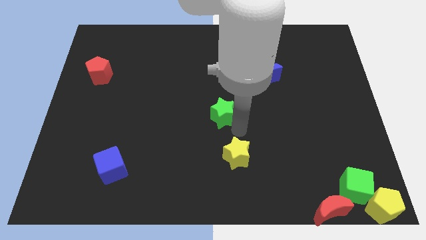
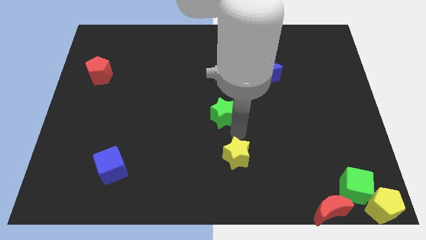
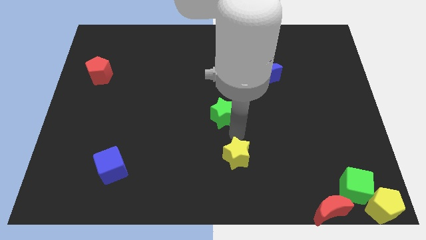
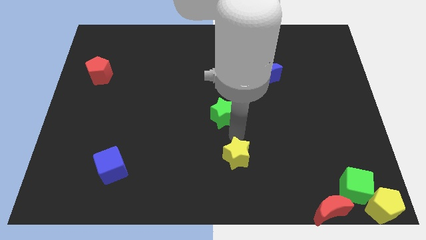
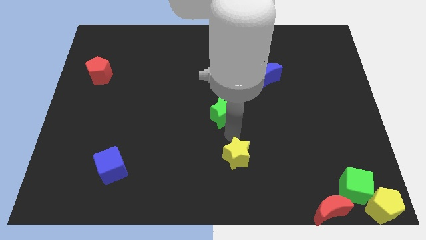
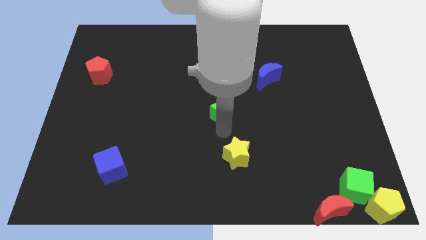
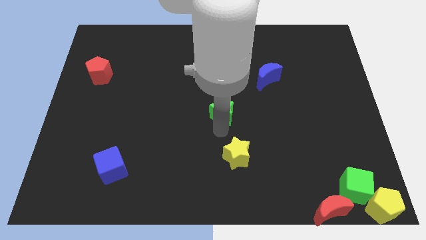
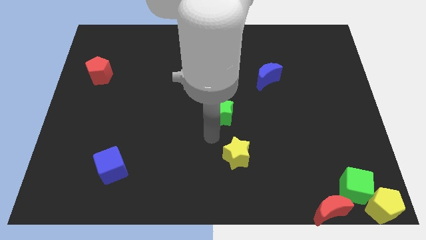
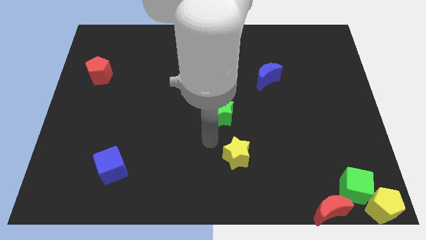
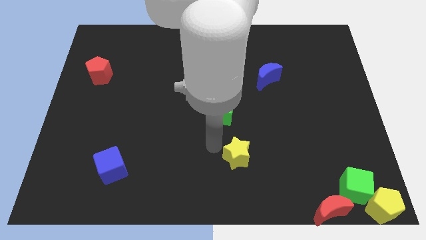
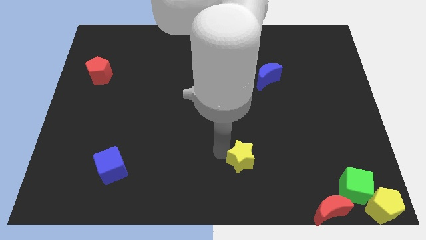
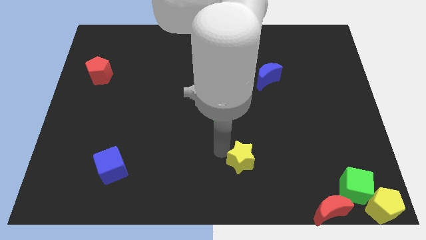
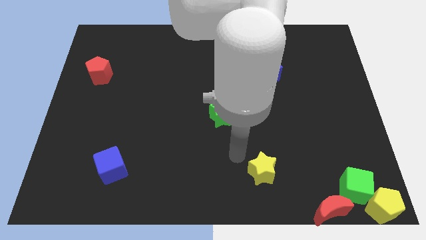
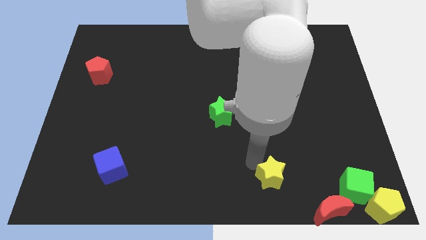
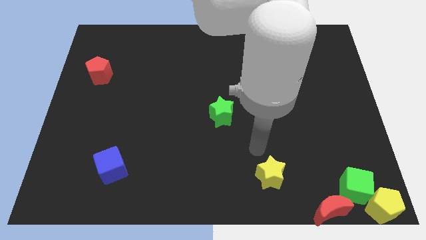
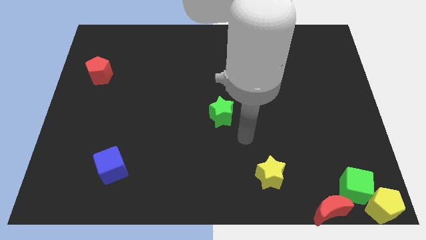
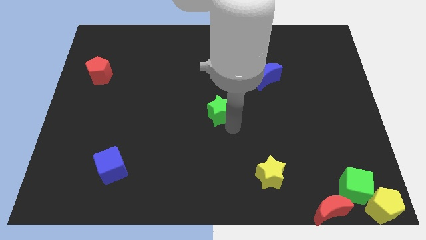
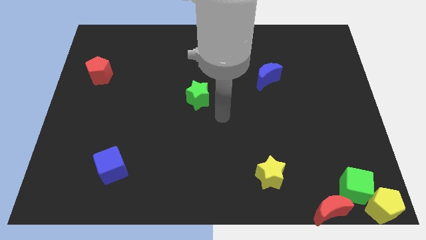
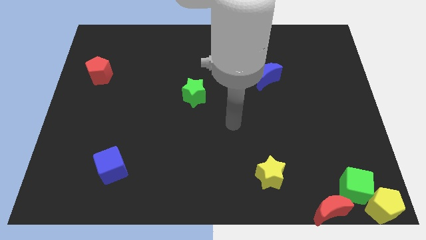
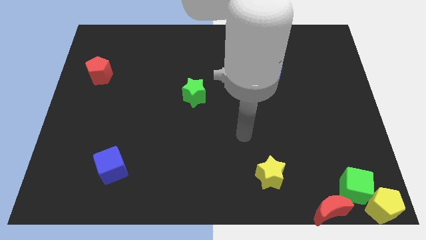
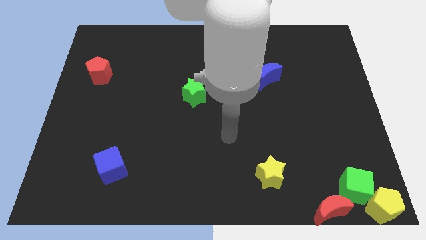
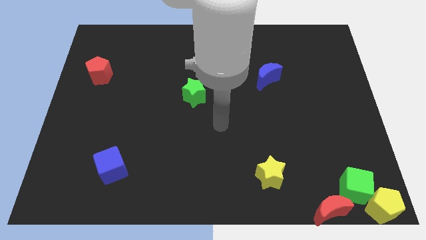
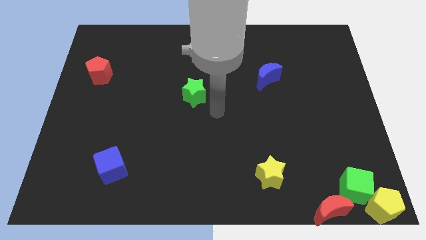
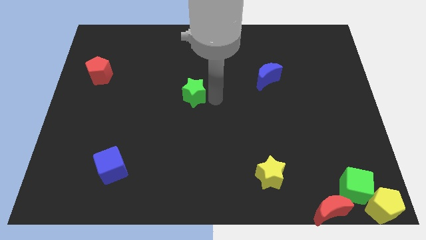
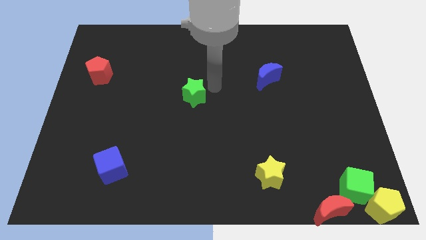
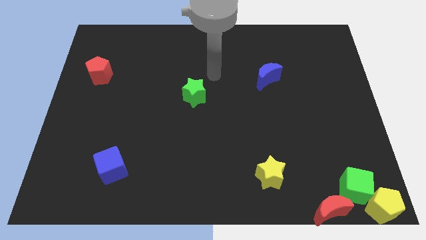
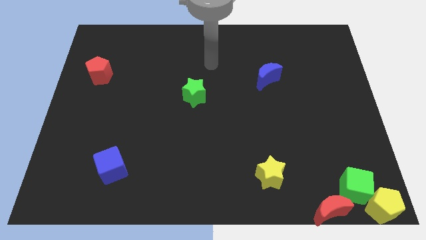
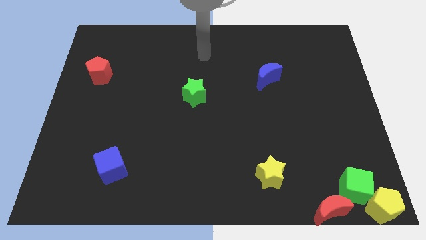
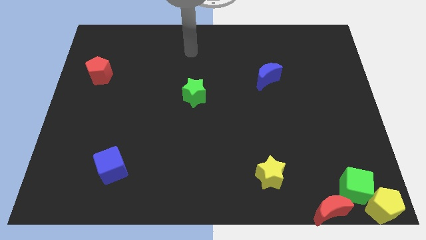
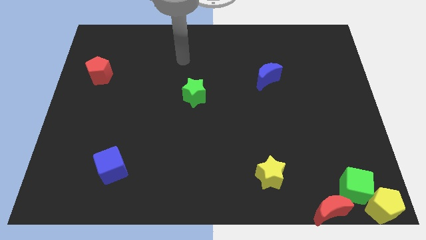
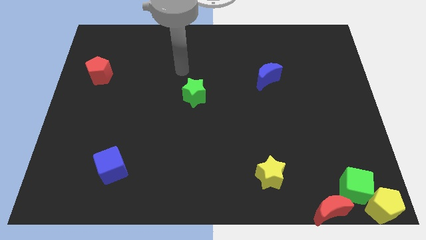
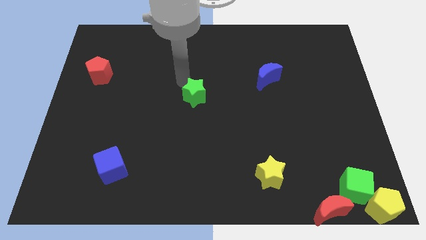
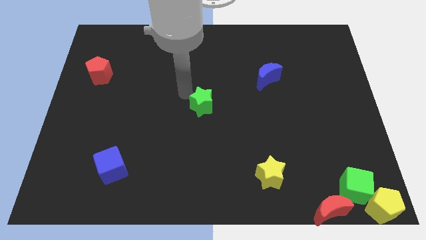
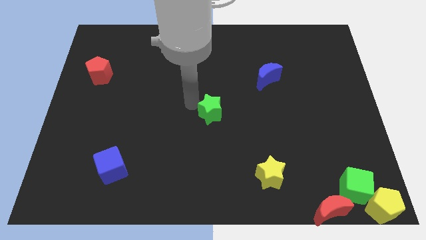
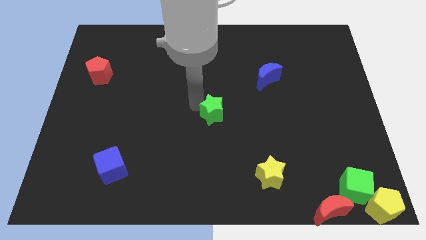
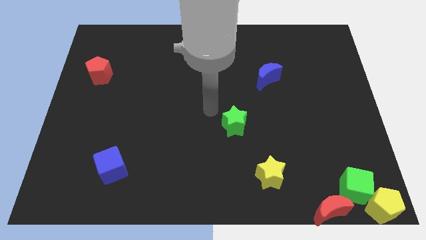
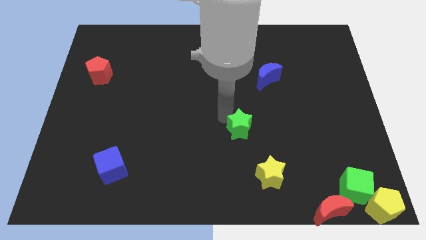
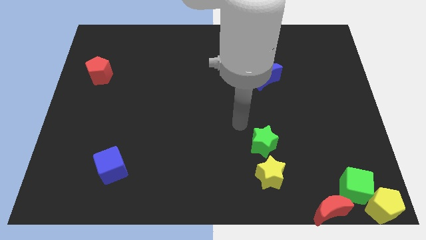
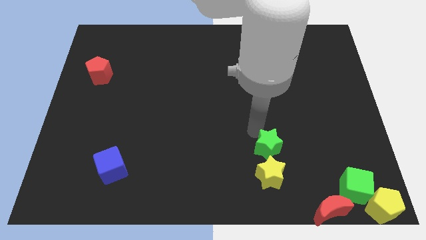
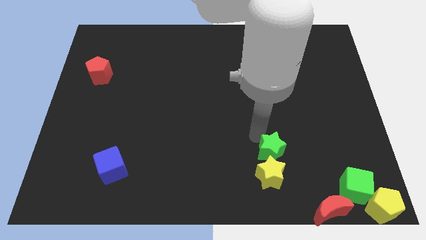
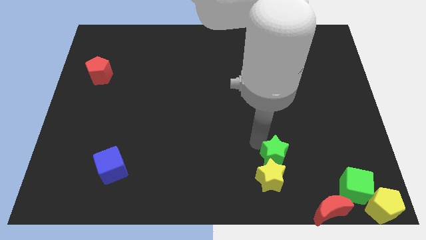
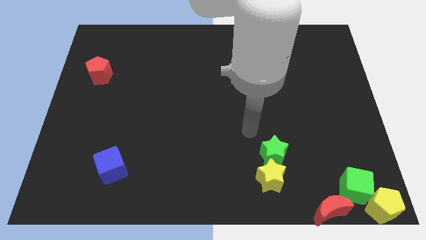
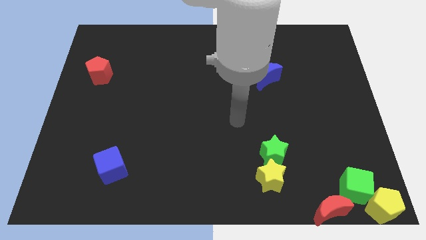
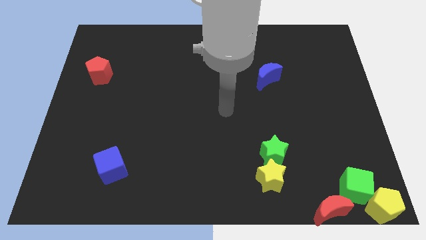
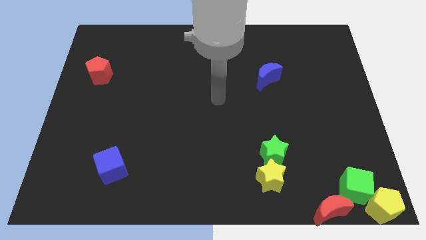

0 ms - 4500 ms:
place the green star below the blue crescent

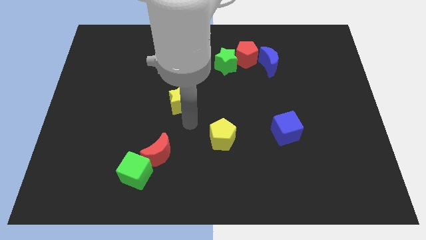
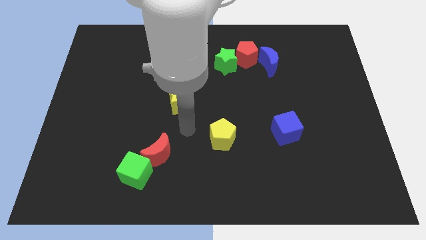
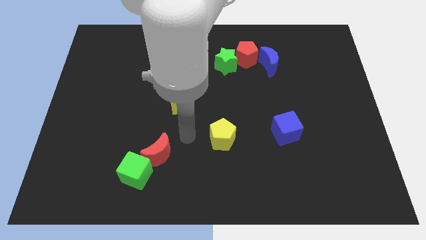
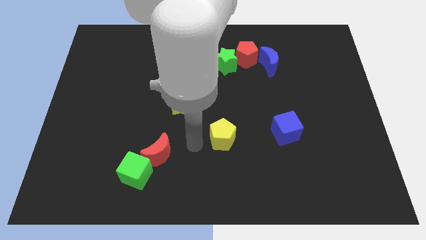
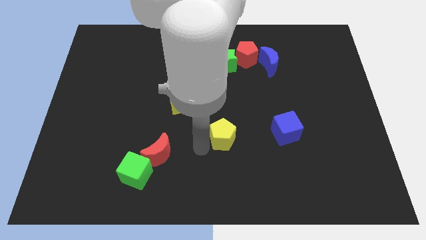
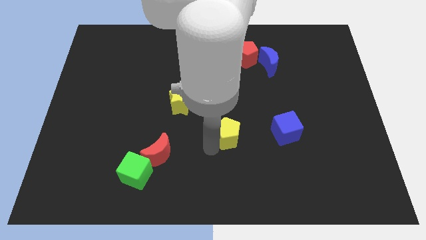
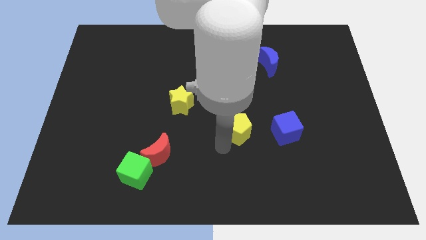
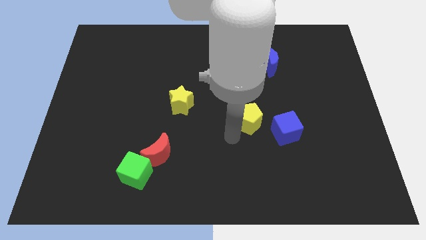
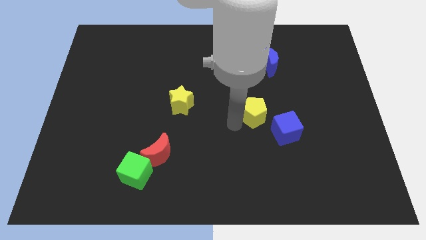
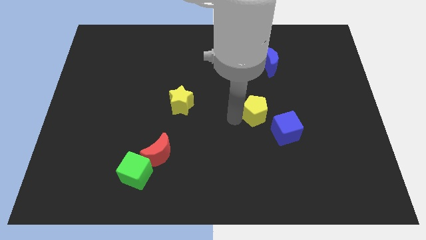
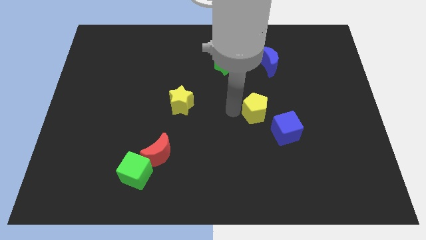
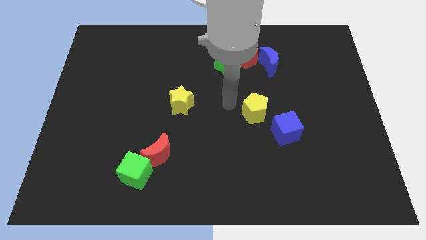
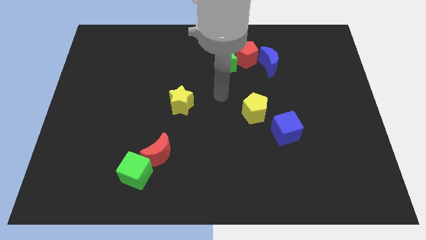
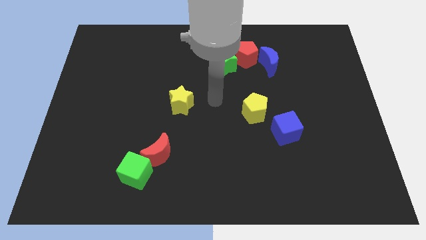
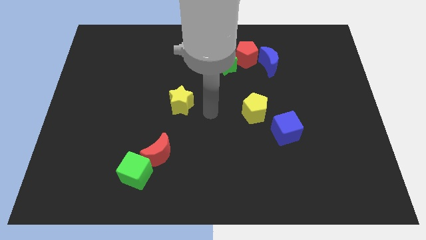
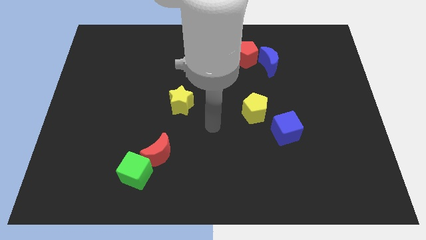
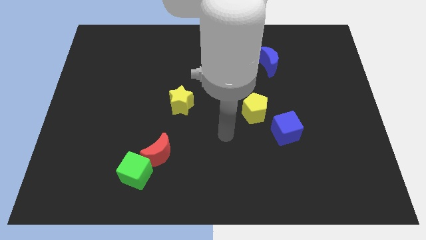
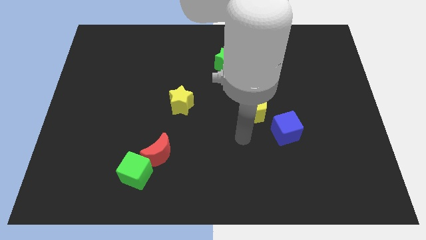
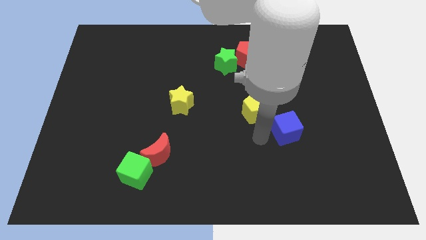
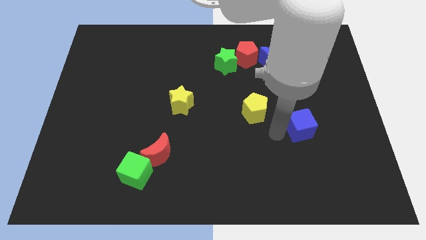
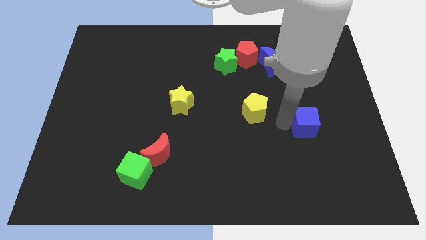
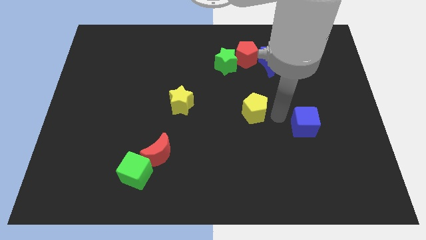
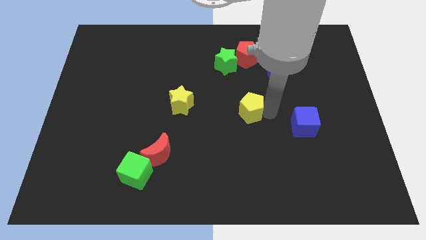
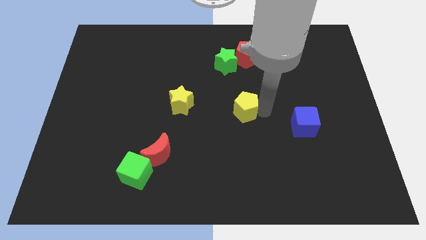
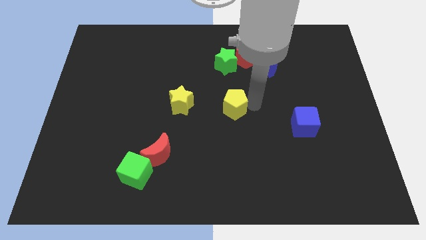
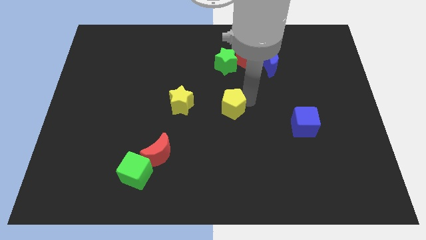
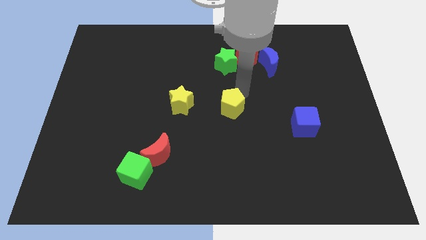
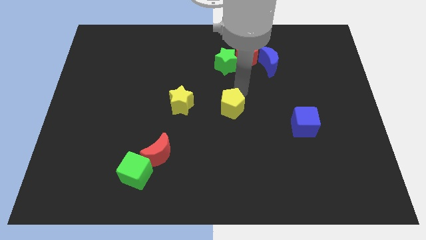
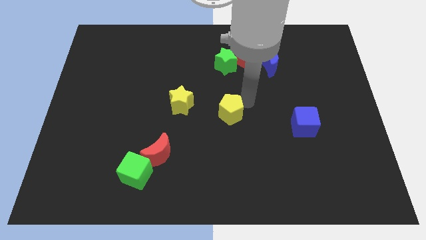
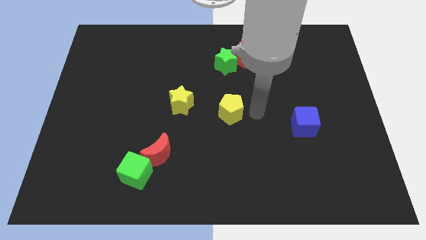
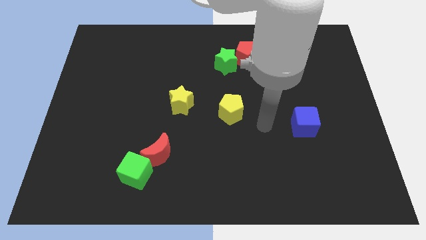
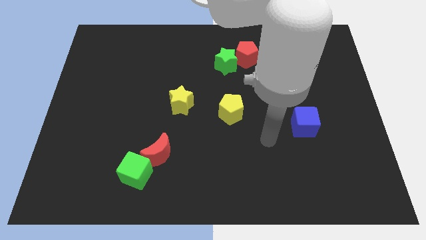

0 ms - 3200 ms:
place the yellow pentagon below the green star

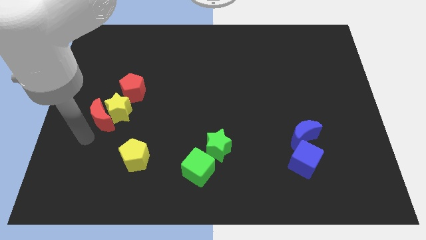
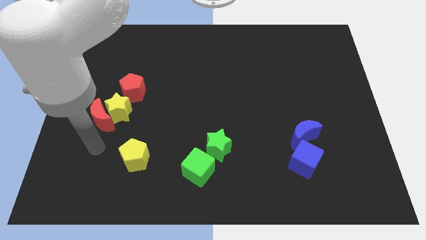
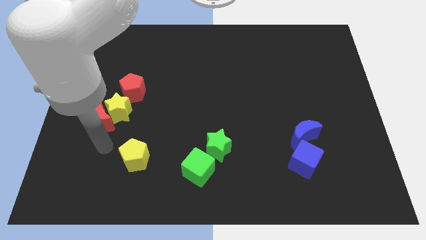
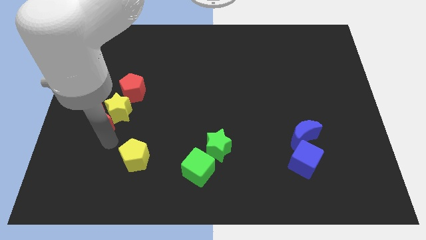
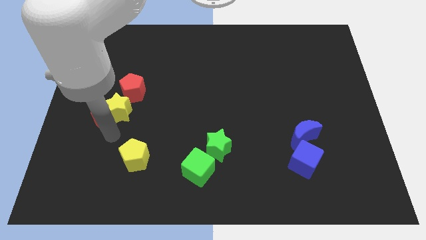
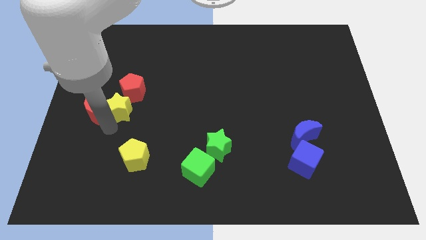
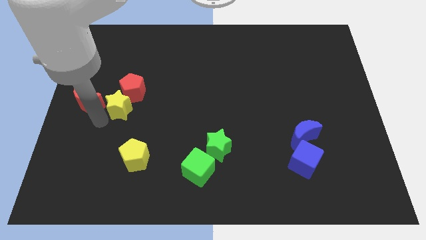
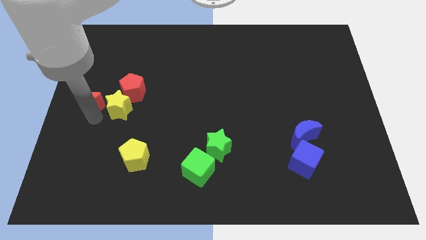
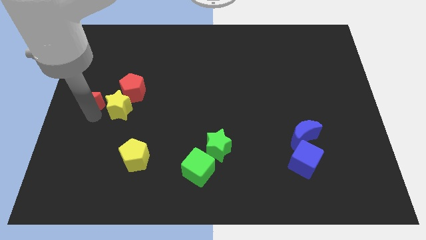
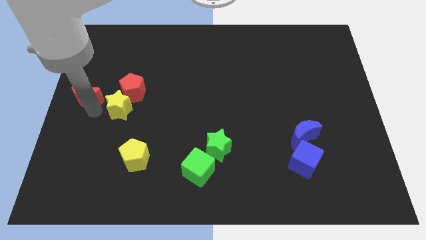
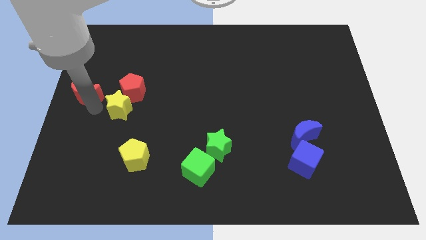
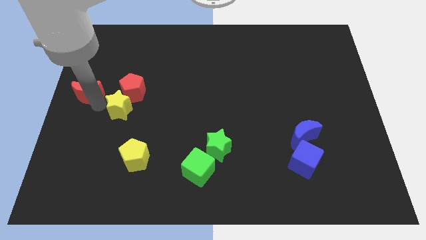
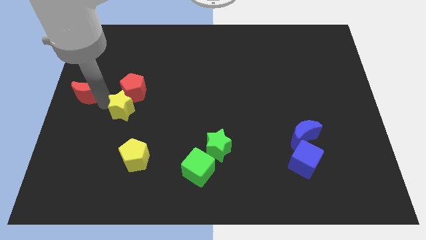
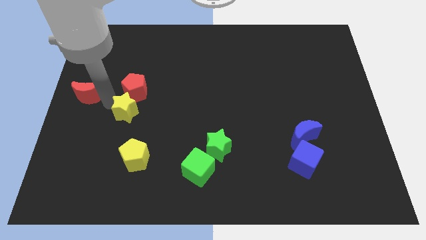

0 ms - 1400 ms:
separate red moon and the yellow star
